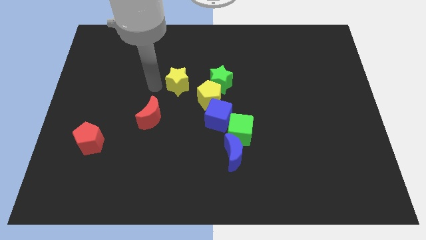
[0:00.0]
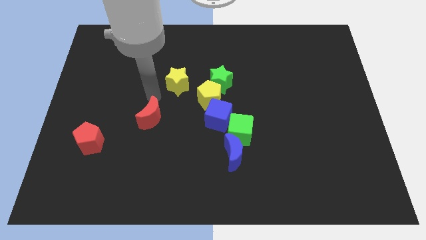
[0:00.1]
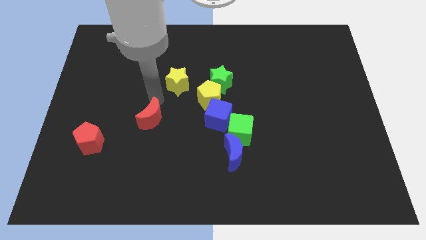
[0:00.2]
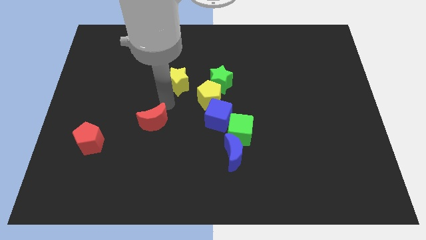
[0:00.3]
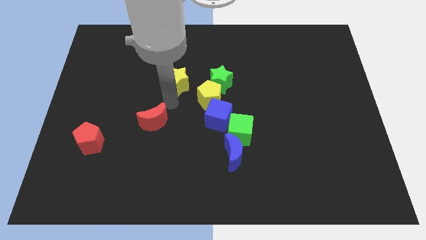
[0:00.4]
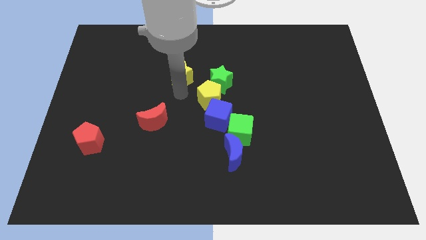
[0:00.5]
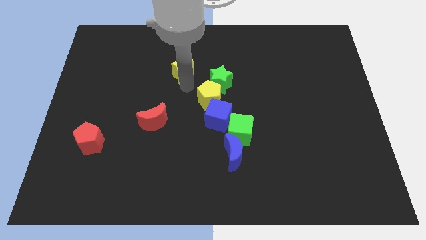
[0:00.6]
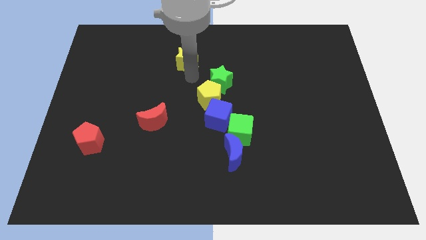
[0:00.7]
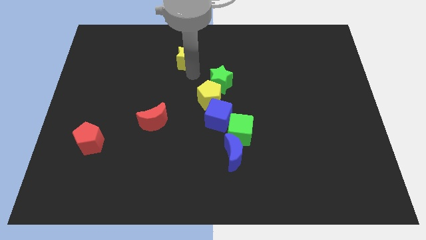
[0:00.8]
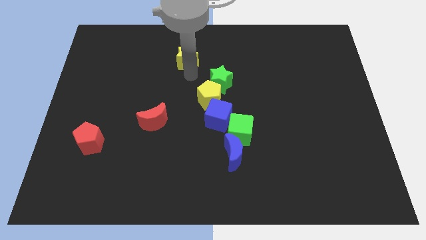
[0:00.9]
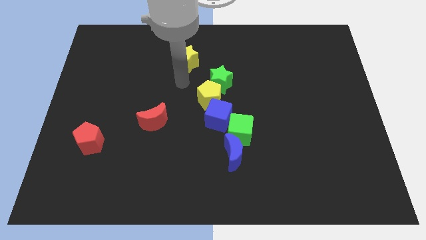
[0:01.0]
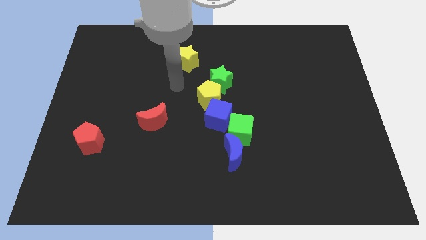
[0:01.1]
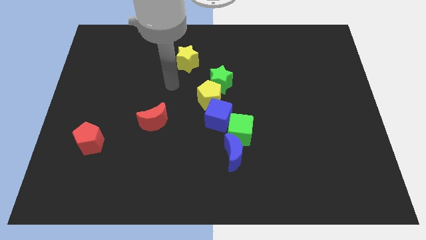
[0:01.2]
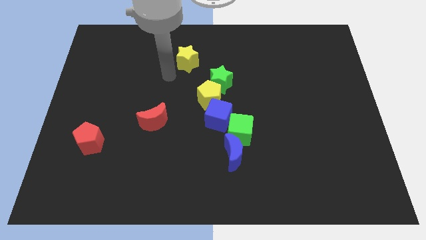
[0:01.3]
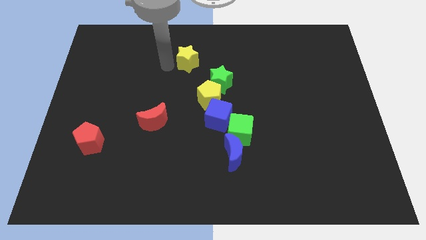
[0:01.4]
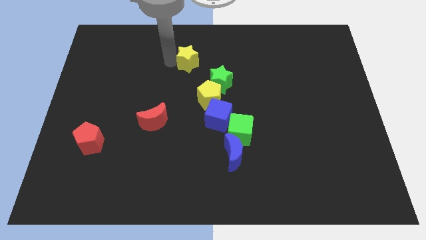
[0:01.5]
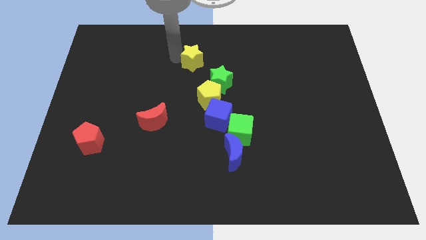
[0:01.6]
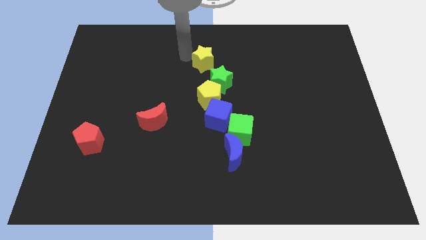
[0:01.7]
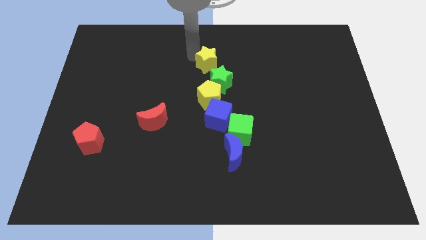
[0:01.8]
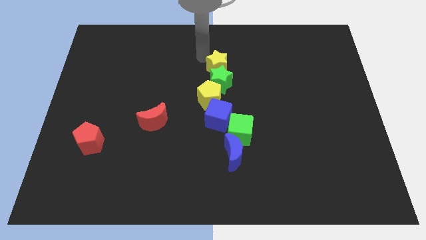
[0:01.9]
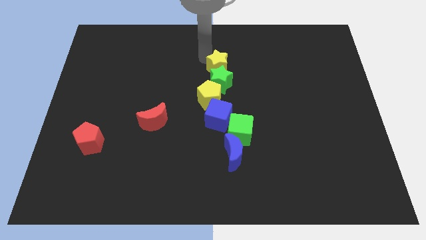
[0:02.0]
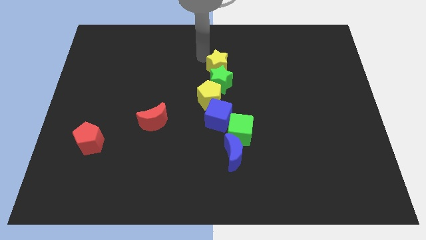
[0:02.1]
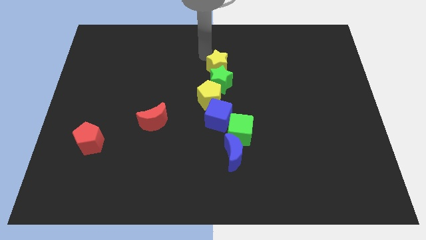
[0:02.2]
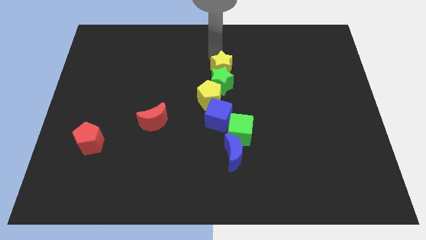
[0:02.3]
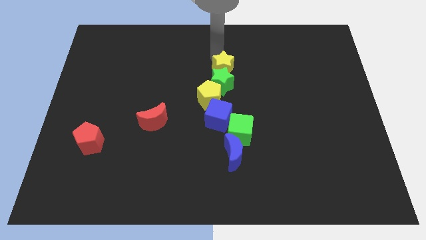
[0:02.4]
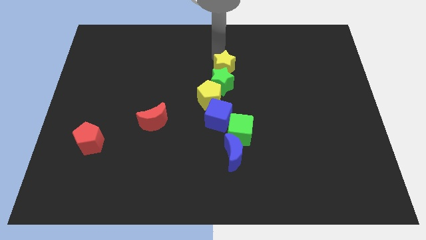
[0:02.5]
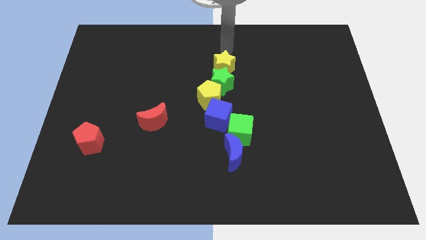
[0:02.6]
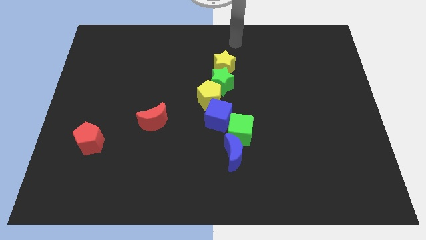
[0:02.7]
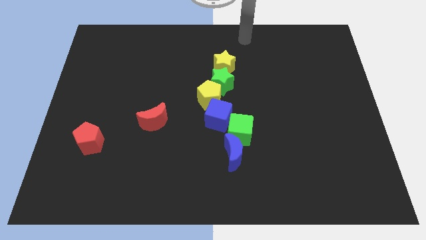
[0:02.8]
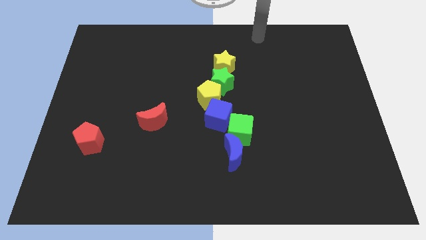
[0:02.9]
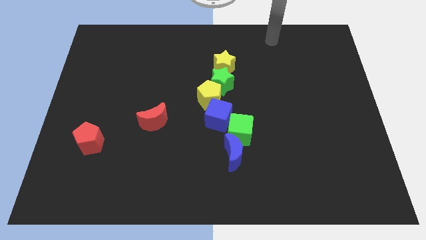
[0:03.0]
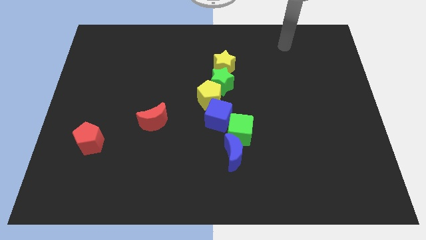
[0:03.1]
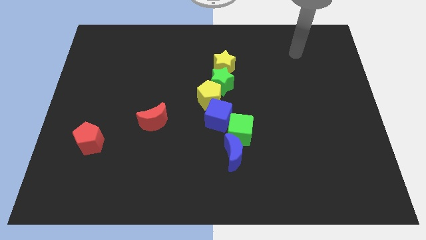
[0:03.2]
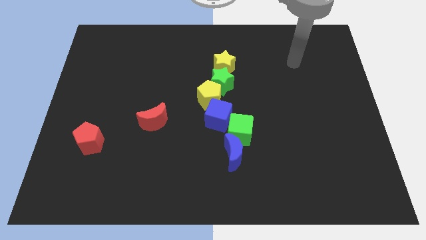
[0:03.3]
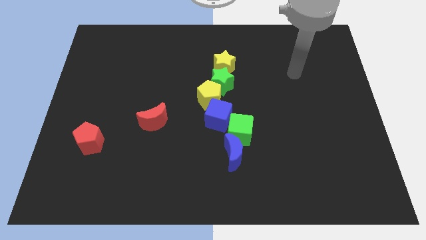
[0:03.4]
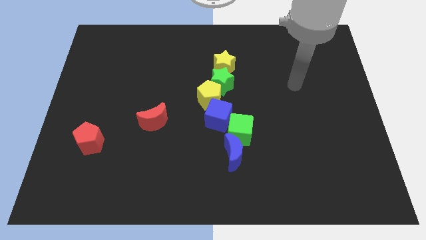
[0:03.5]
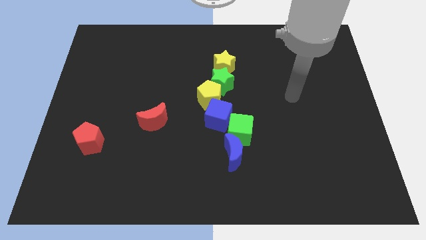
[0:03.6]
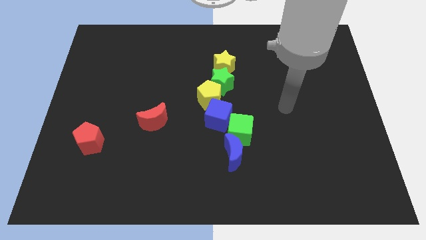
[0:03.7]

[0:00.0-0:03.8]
place the yellow star above the green star

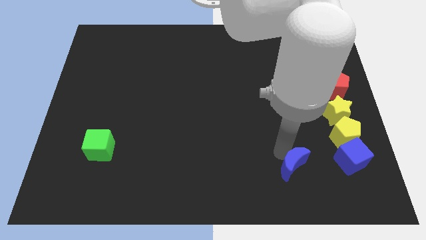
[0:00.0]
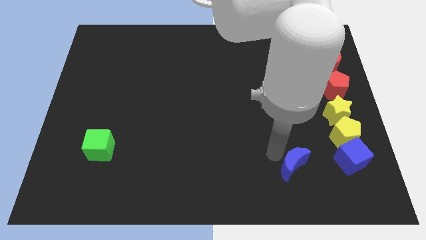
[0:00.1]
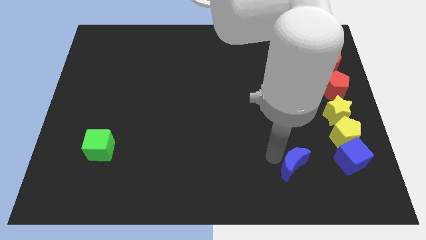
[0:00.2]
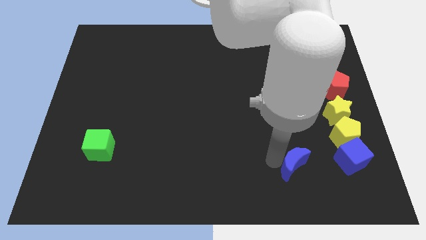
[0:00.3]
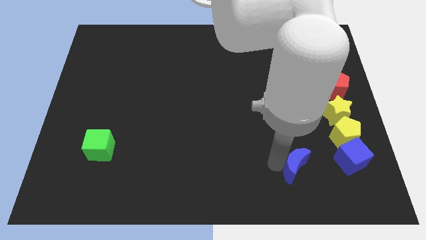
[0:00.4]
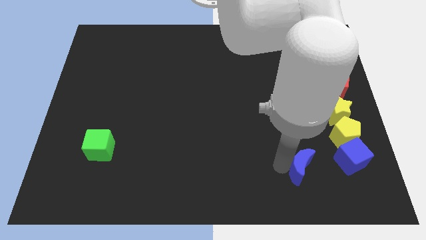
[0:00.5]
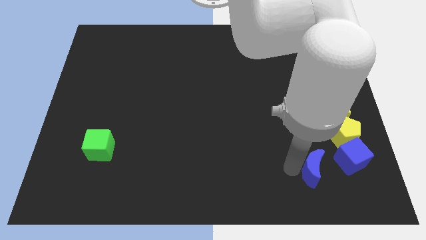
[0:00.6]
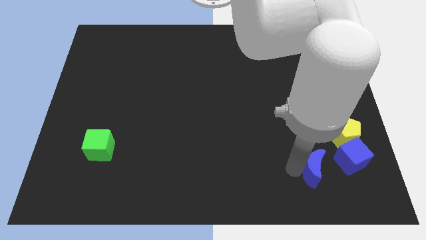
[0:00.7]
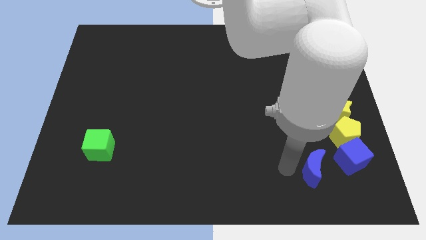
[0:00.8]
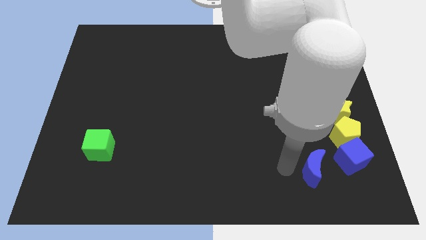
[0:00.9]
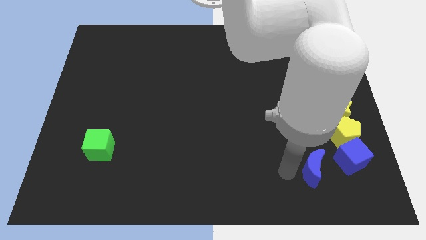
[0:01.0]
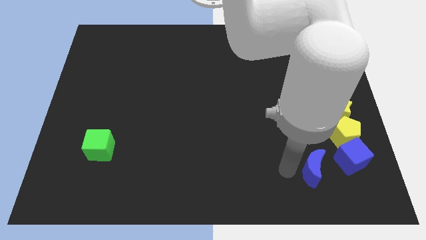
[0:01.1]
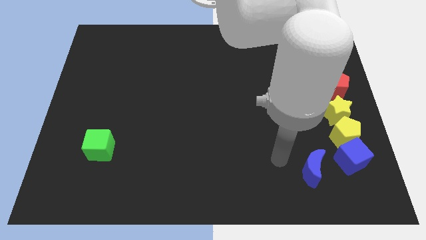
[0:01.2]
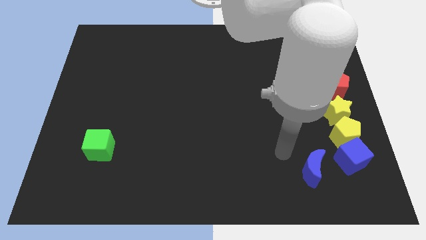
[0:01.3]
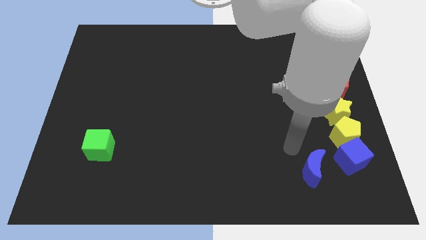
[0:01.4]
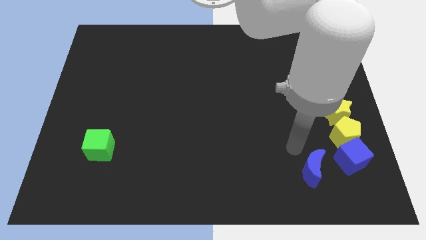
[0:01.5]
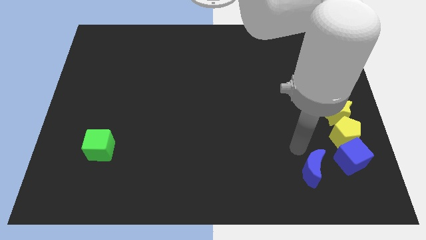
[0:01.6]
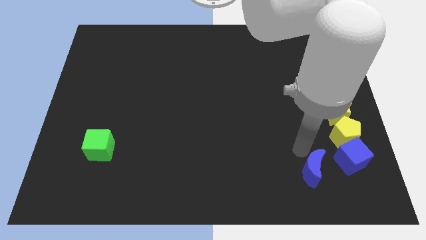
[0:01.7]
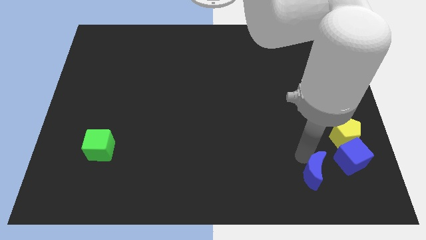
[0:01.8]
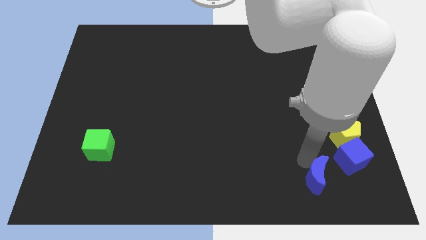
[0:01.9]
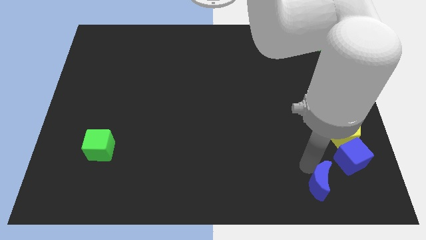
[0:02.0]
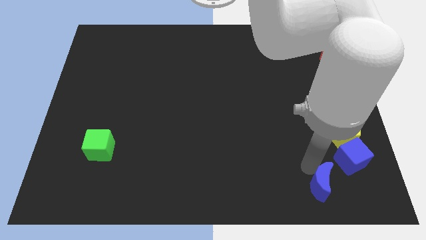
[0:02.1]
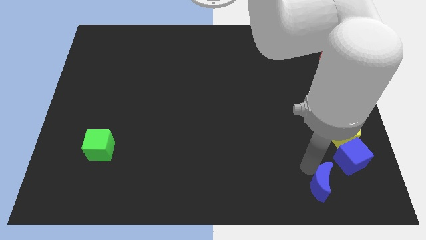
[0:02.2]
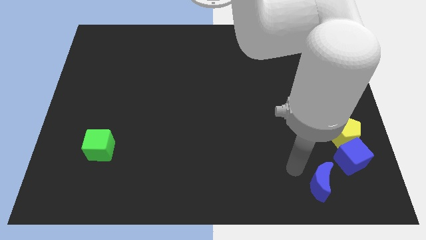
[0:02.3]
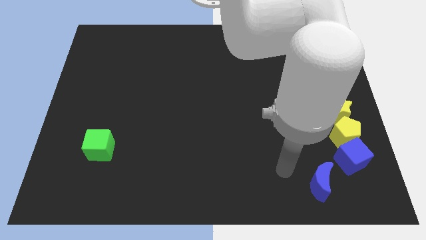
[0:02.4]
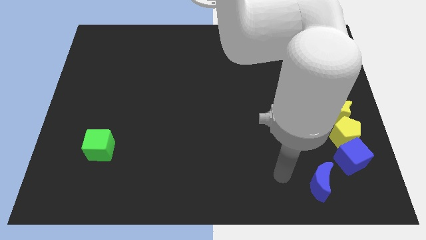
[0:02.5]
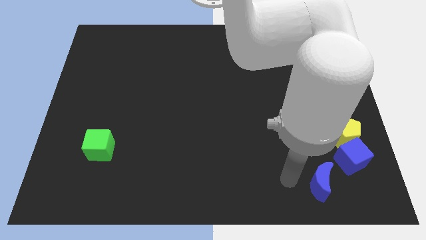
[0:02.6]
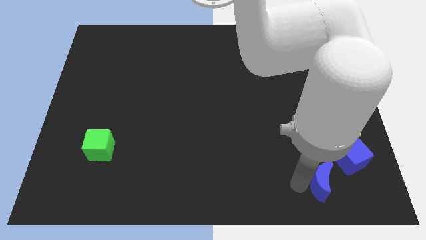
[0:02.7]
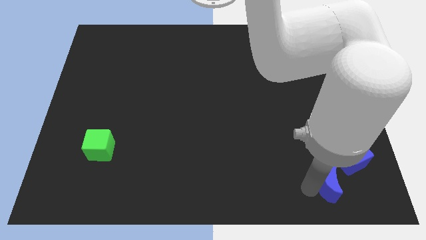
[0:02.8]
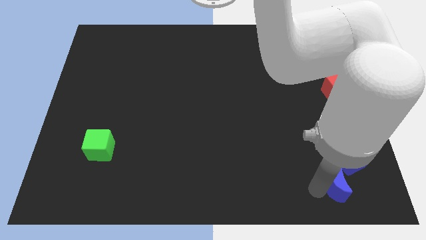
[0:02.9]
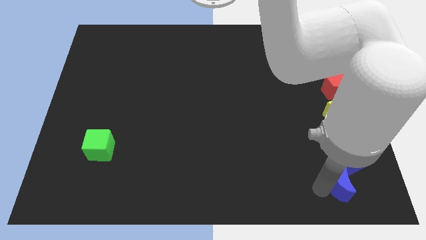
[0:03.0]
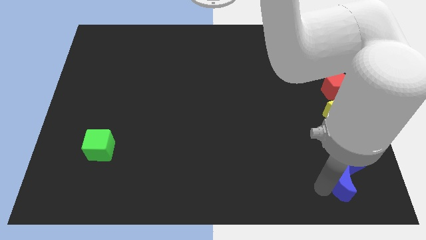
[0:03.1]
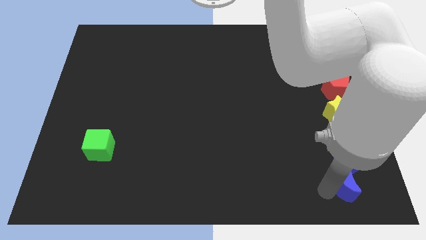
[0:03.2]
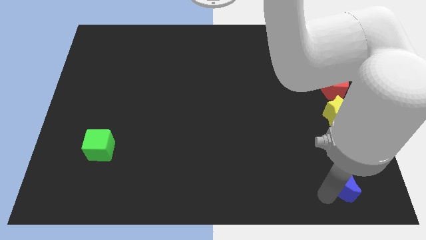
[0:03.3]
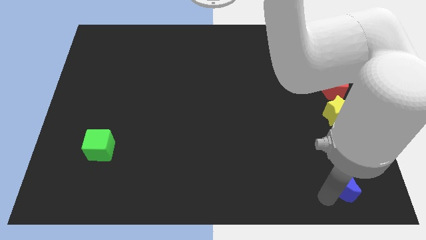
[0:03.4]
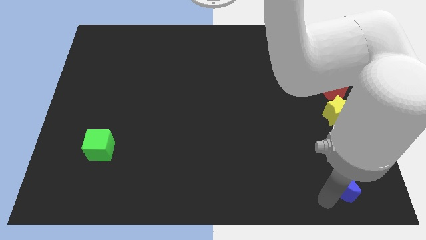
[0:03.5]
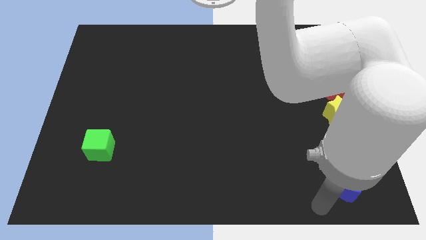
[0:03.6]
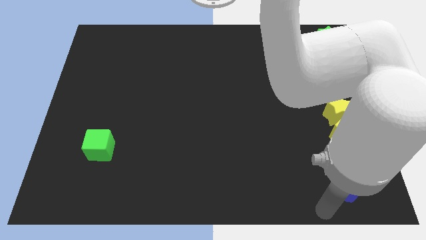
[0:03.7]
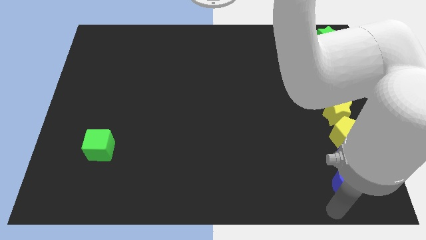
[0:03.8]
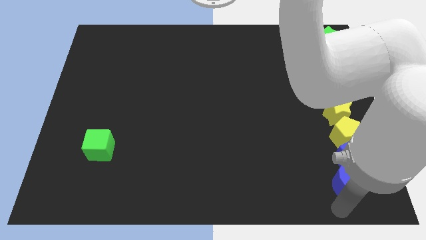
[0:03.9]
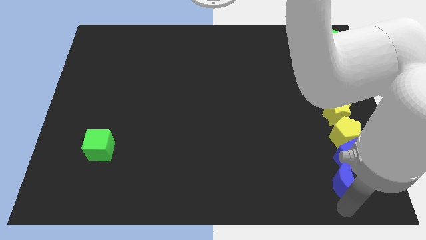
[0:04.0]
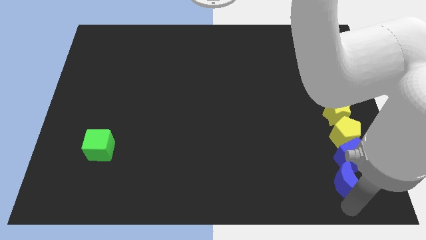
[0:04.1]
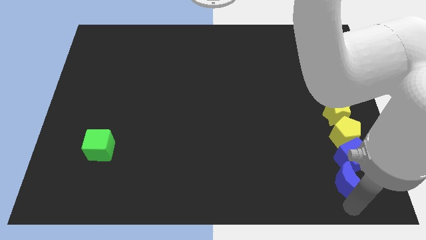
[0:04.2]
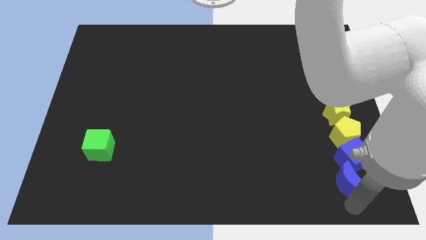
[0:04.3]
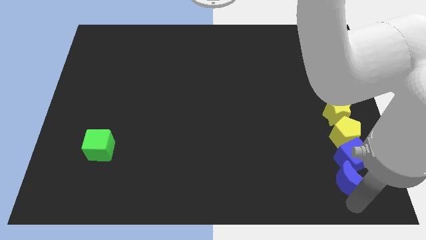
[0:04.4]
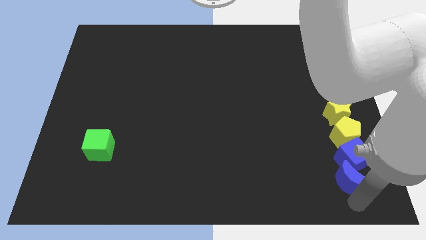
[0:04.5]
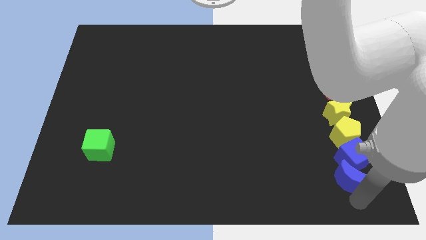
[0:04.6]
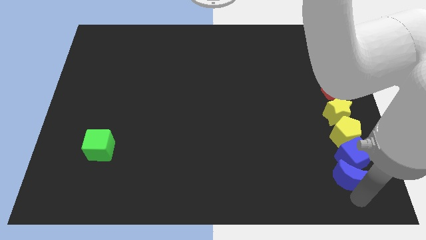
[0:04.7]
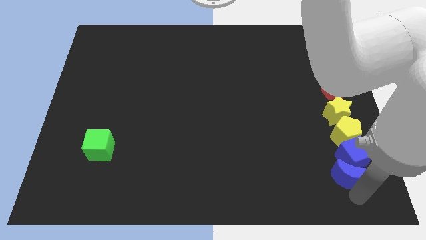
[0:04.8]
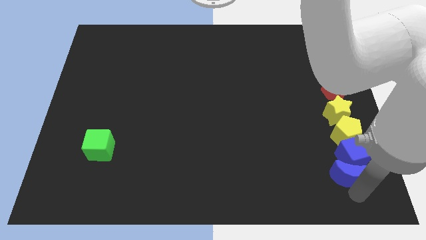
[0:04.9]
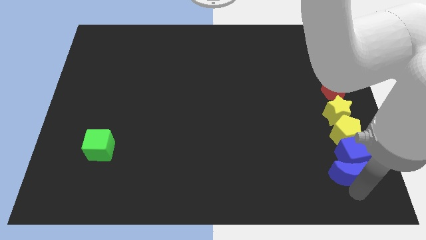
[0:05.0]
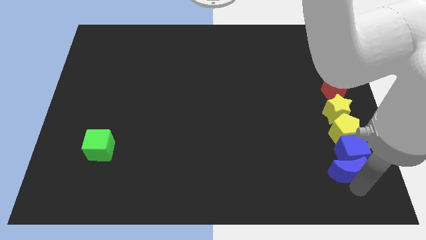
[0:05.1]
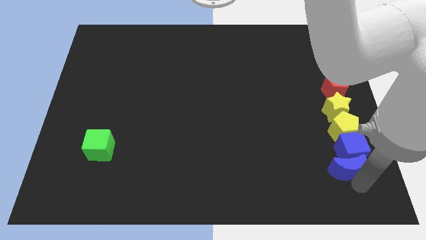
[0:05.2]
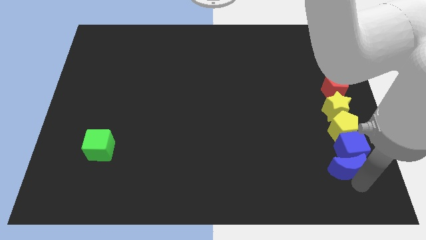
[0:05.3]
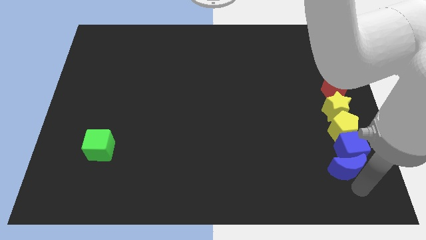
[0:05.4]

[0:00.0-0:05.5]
move the blue crescent into the bottom side of the vertical line of blocks
